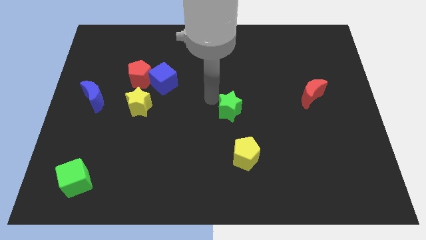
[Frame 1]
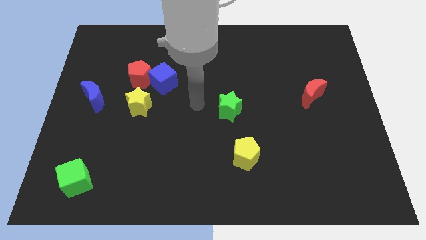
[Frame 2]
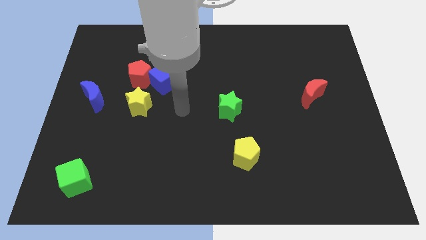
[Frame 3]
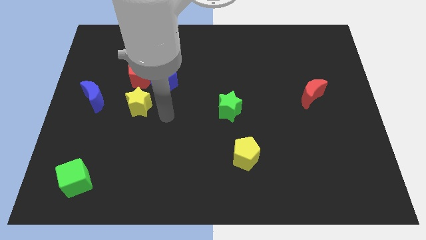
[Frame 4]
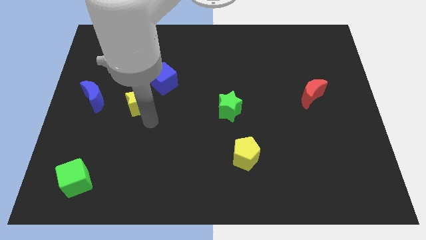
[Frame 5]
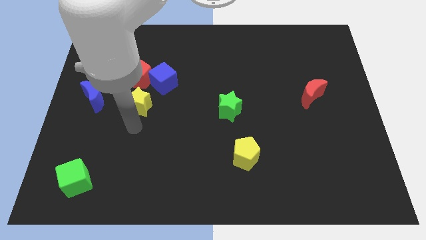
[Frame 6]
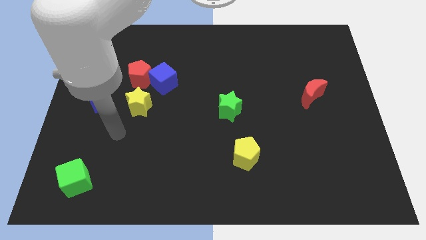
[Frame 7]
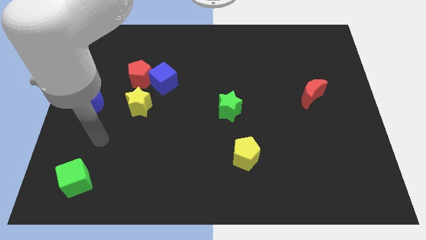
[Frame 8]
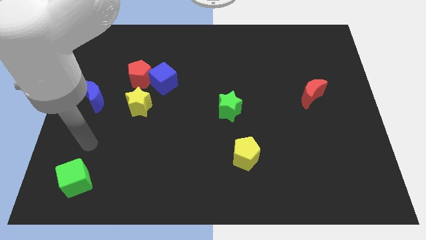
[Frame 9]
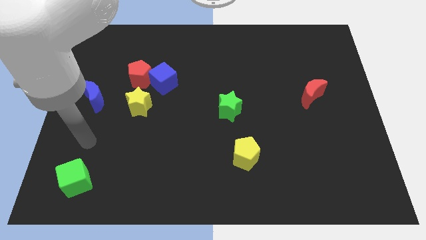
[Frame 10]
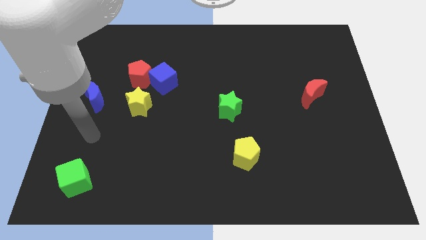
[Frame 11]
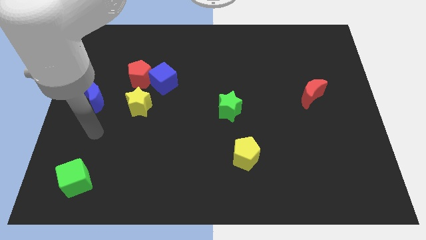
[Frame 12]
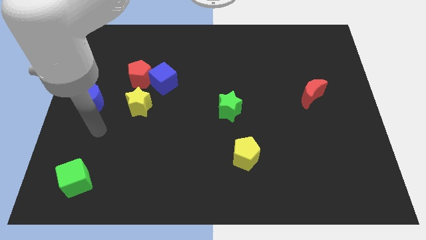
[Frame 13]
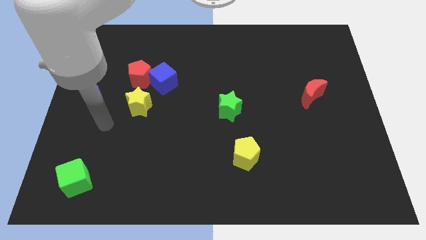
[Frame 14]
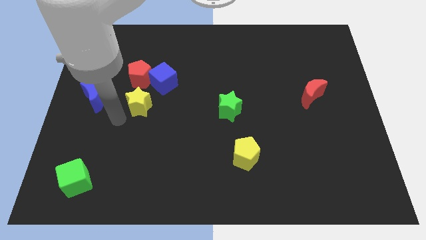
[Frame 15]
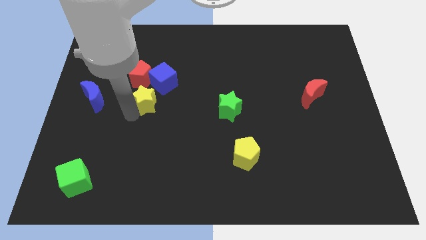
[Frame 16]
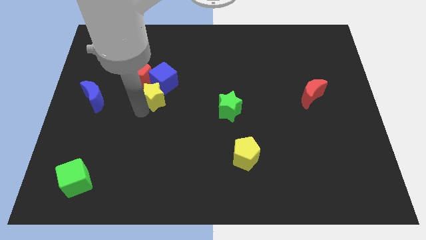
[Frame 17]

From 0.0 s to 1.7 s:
push the yellow star into the blue cube

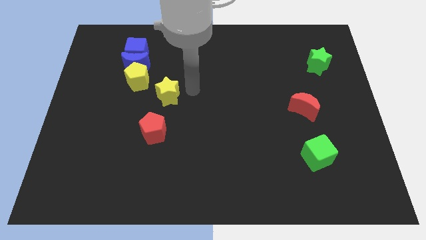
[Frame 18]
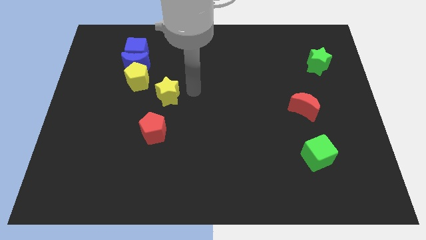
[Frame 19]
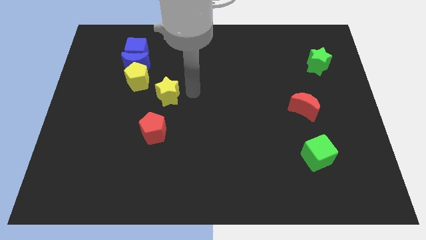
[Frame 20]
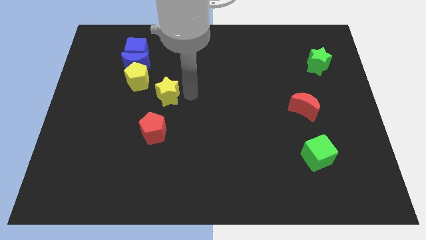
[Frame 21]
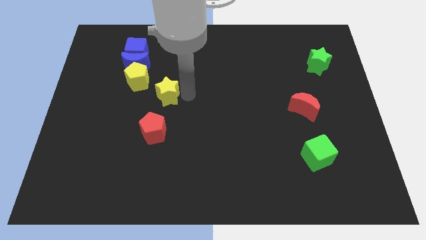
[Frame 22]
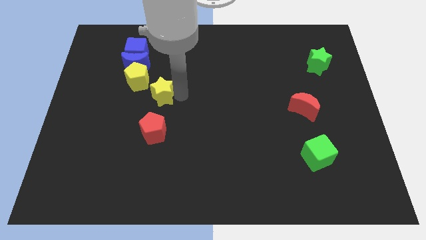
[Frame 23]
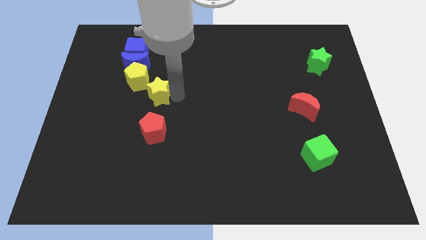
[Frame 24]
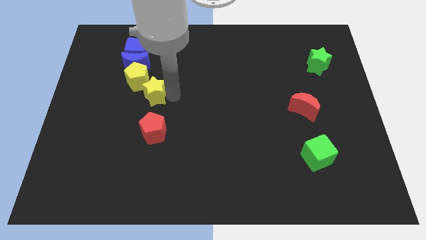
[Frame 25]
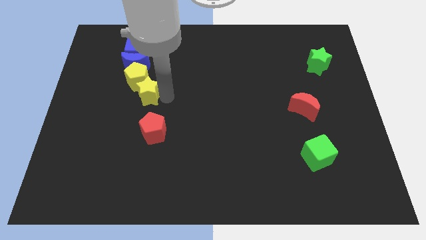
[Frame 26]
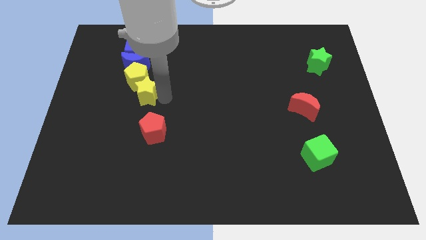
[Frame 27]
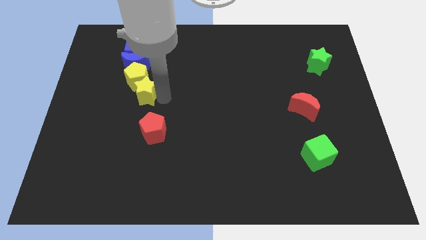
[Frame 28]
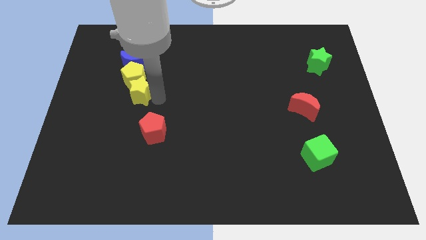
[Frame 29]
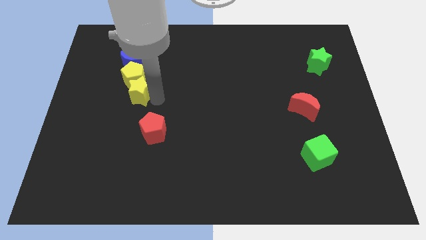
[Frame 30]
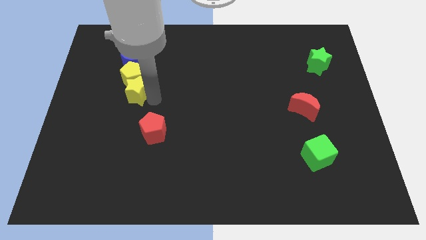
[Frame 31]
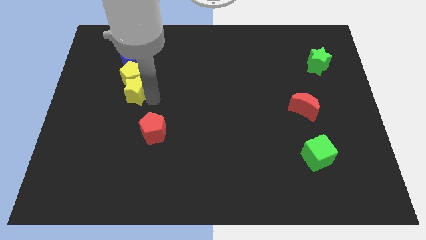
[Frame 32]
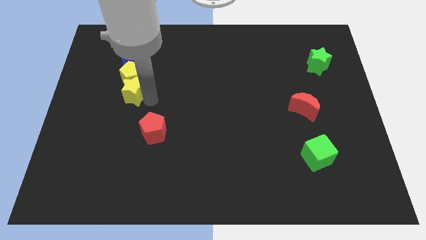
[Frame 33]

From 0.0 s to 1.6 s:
push the yellow star to the bottom of the yellow pentagon

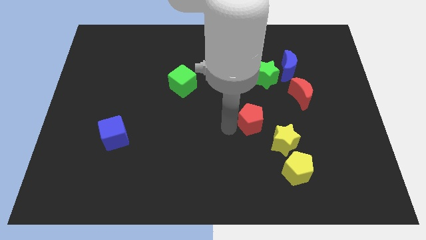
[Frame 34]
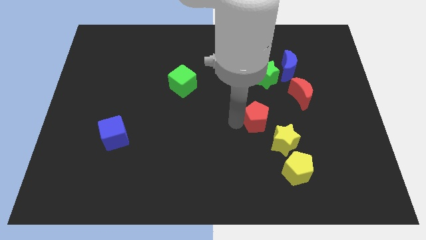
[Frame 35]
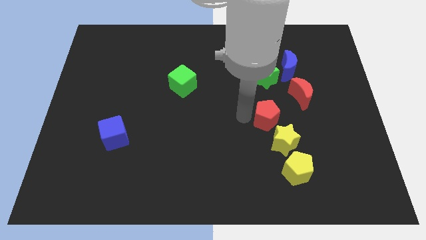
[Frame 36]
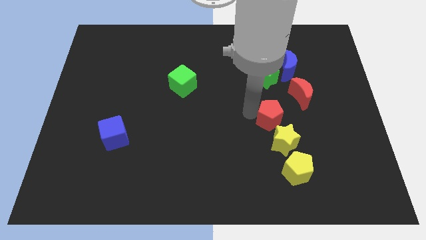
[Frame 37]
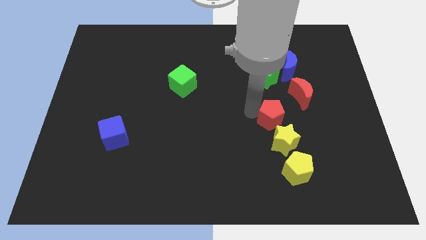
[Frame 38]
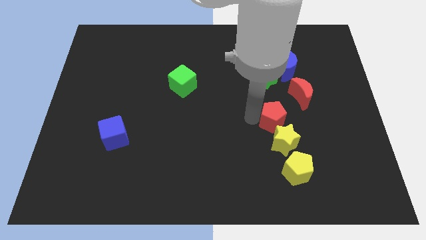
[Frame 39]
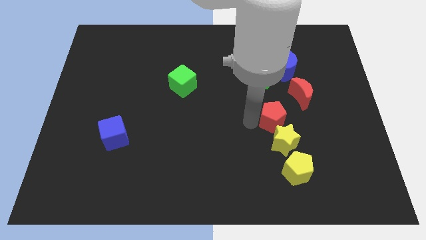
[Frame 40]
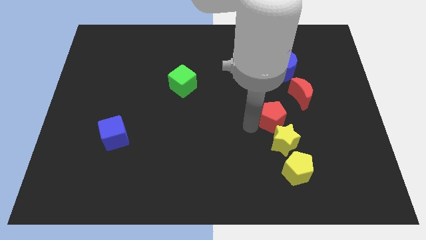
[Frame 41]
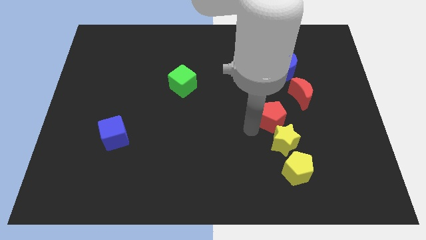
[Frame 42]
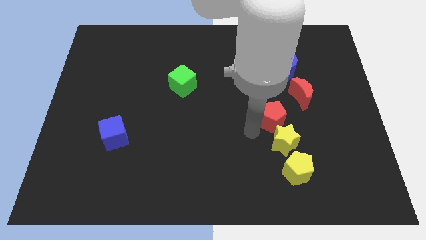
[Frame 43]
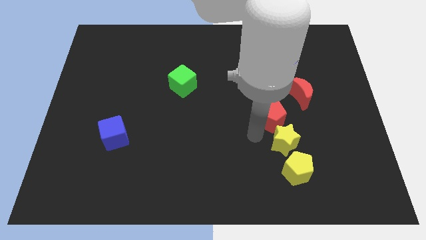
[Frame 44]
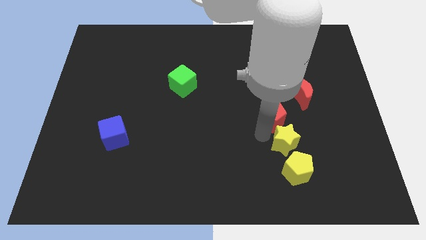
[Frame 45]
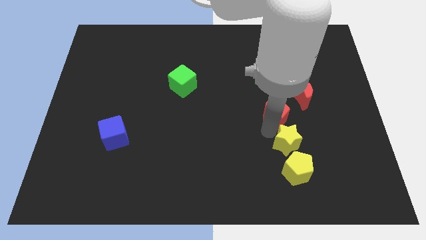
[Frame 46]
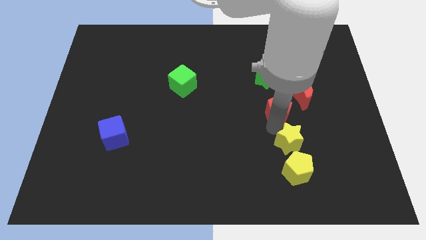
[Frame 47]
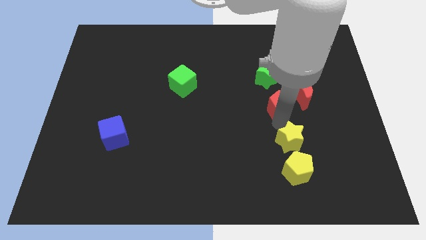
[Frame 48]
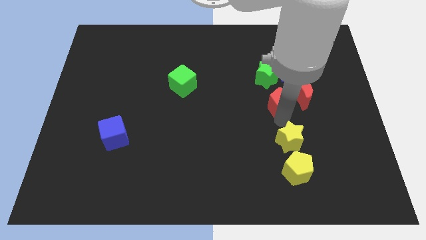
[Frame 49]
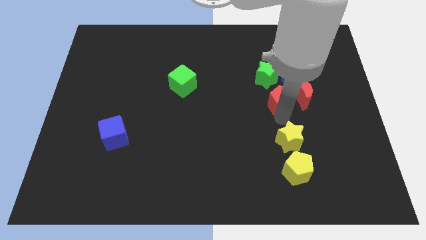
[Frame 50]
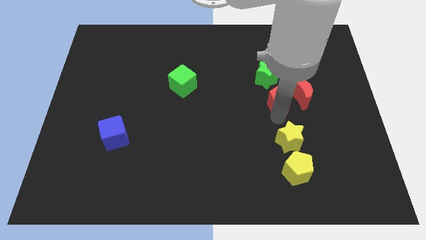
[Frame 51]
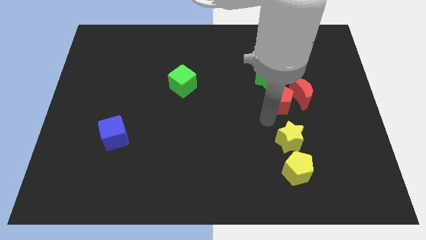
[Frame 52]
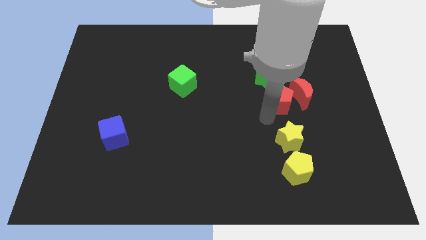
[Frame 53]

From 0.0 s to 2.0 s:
put the red pentagon vertically above the yellow star

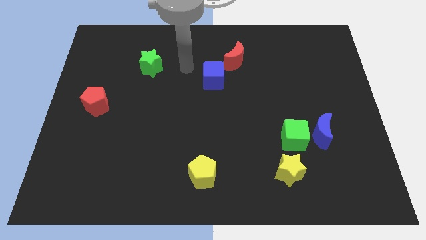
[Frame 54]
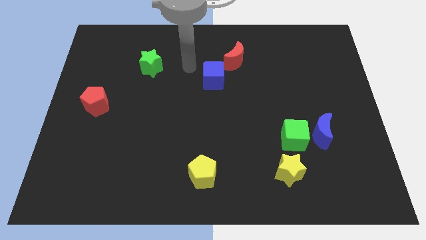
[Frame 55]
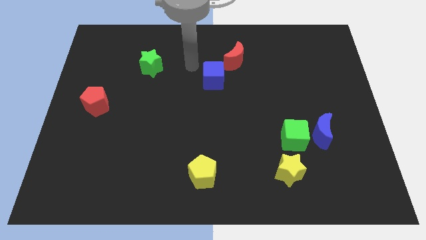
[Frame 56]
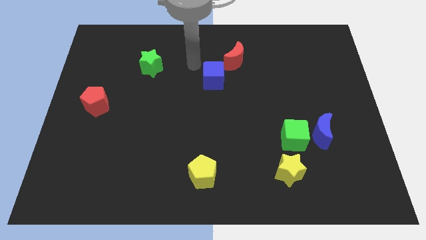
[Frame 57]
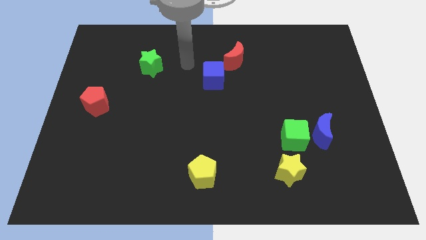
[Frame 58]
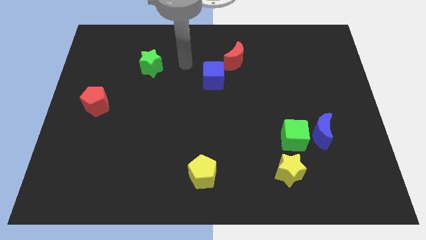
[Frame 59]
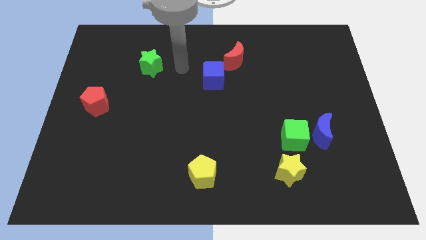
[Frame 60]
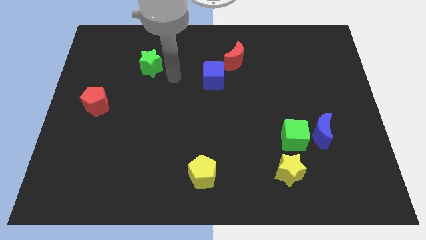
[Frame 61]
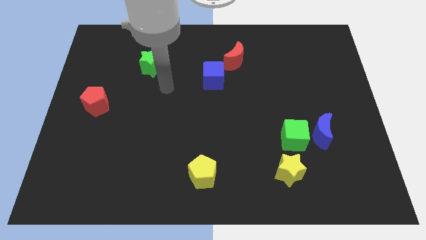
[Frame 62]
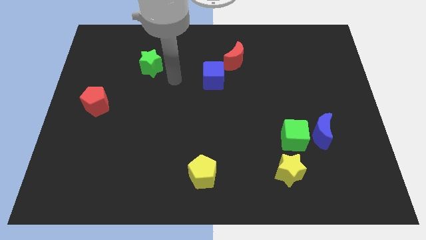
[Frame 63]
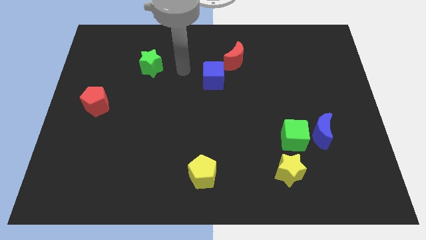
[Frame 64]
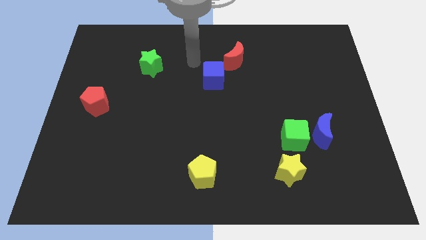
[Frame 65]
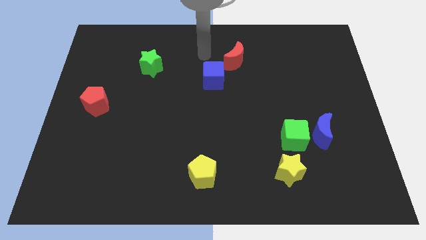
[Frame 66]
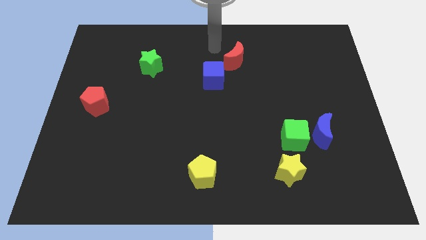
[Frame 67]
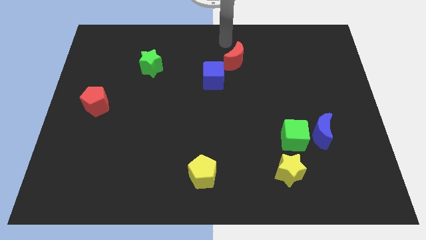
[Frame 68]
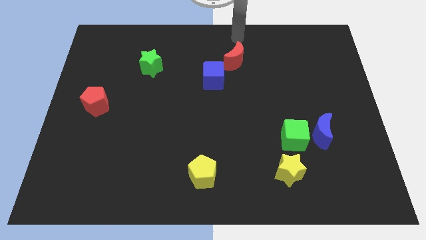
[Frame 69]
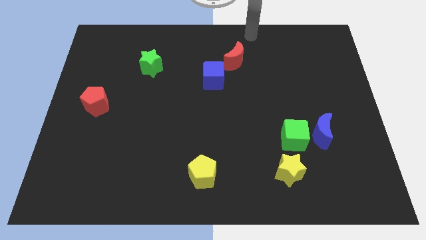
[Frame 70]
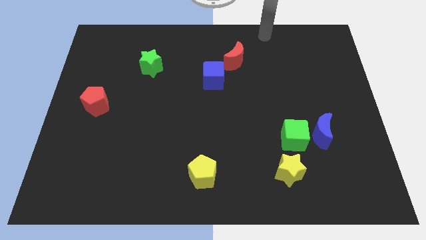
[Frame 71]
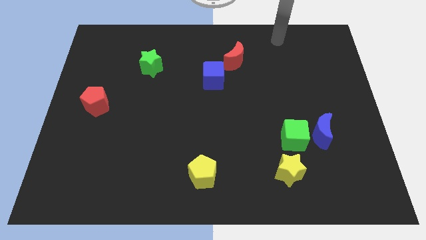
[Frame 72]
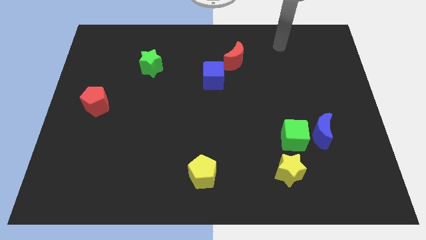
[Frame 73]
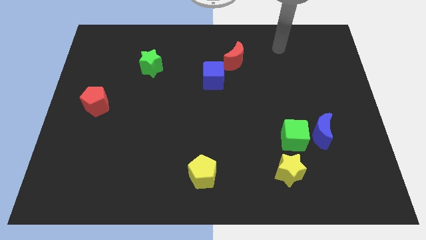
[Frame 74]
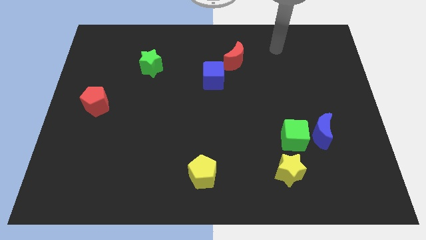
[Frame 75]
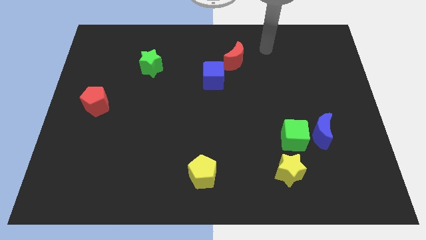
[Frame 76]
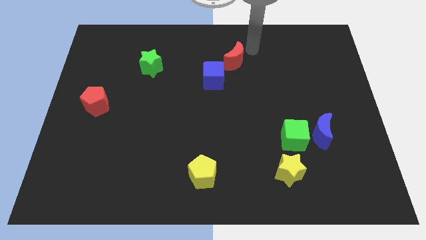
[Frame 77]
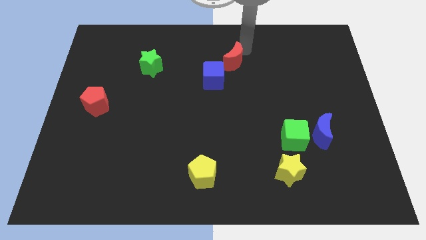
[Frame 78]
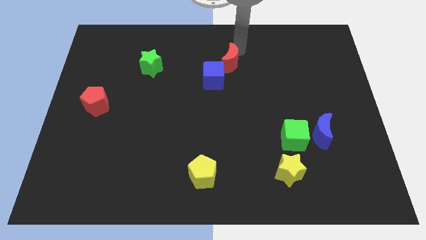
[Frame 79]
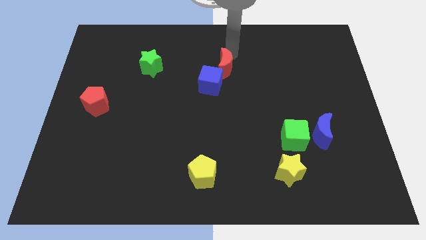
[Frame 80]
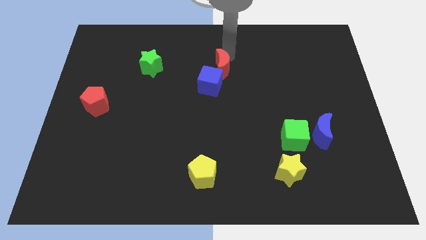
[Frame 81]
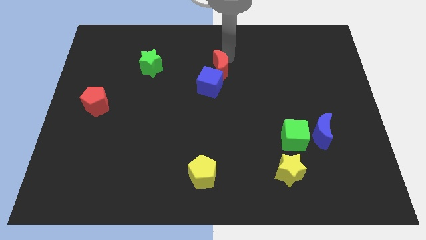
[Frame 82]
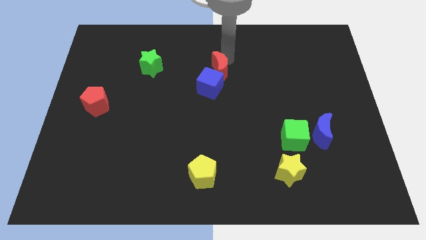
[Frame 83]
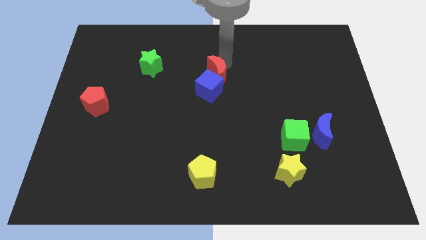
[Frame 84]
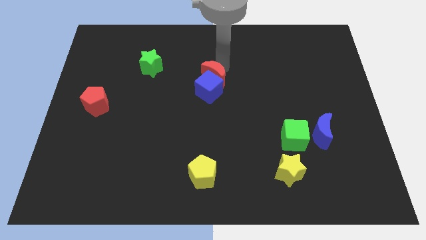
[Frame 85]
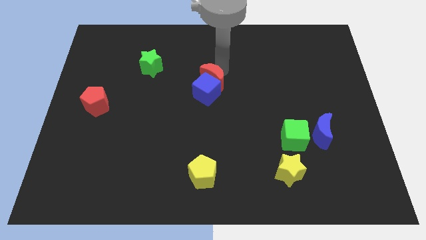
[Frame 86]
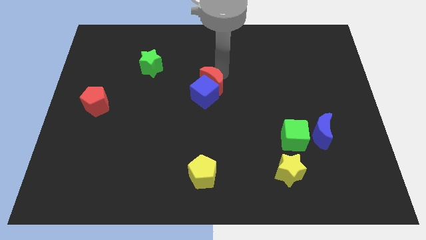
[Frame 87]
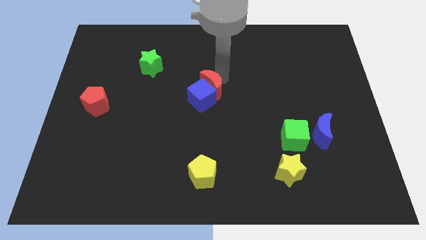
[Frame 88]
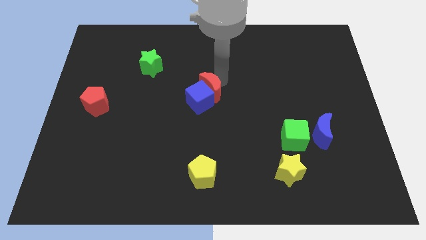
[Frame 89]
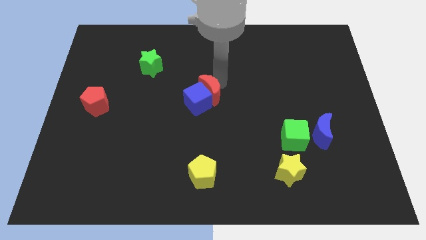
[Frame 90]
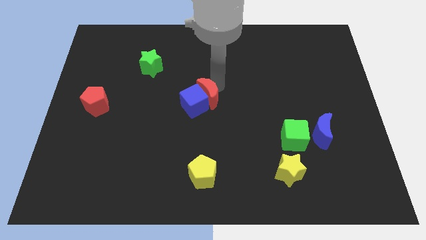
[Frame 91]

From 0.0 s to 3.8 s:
place the red moon and blue cube at the center of the board
